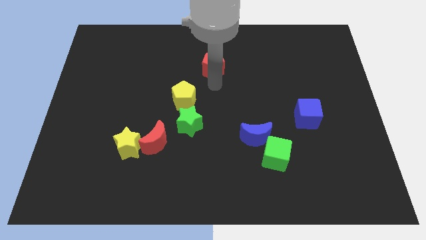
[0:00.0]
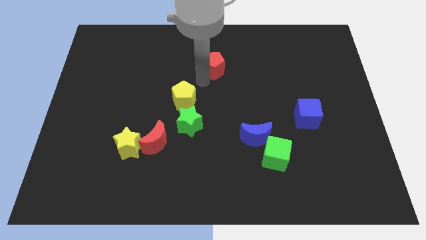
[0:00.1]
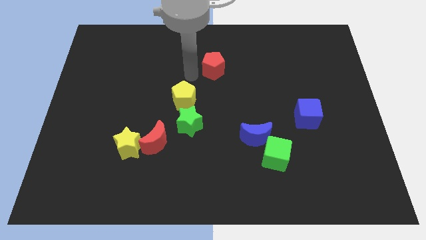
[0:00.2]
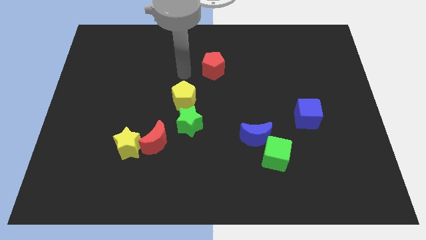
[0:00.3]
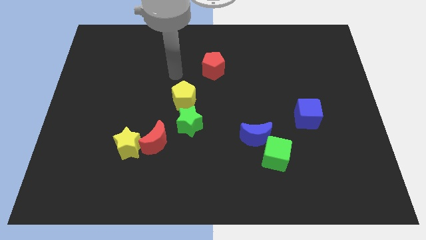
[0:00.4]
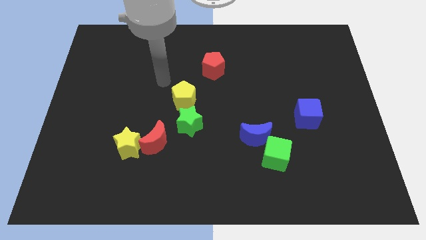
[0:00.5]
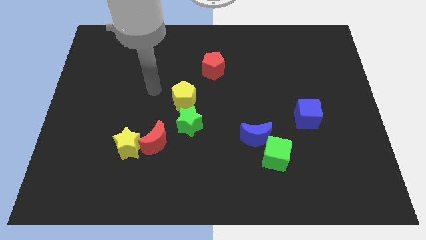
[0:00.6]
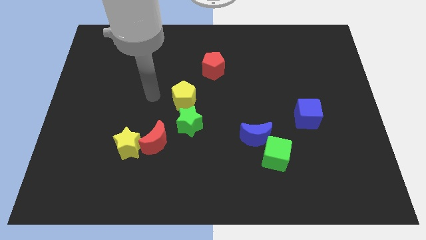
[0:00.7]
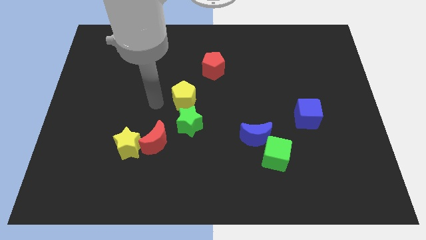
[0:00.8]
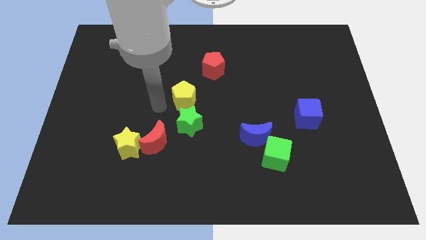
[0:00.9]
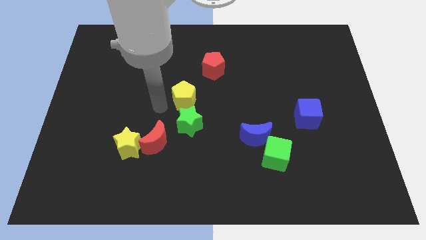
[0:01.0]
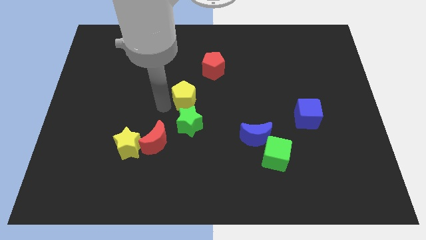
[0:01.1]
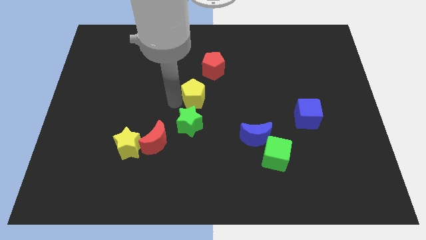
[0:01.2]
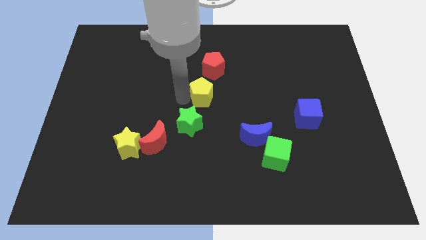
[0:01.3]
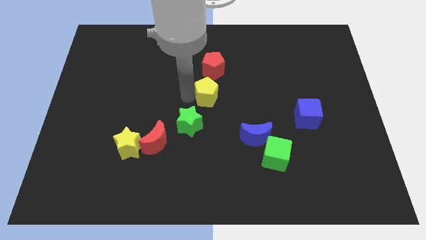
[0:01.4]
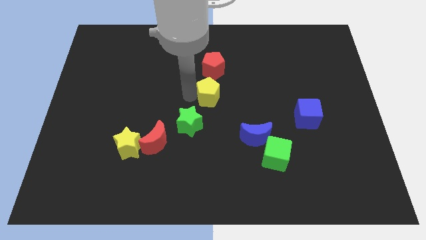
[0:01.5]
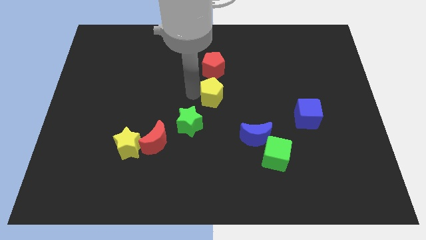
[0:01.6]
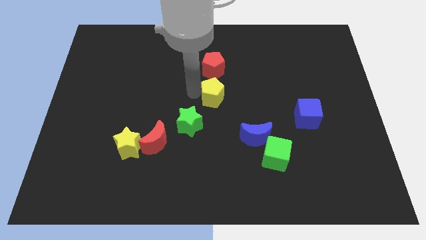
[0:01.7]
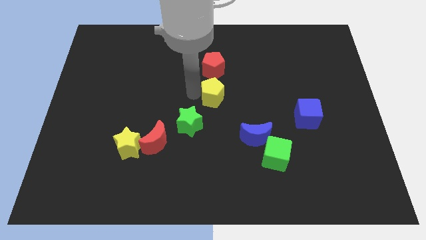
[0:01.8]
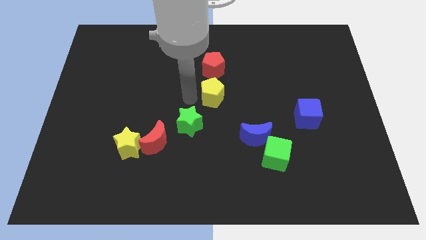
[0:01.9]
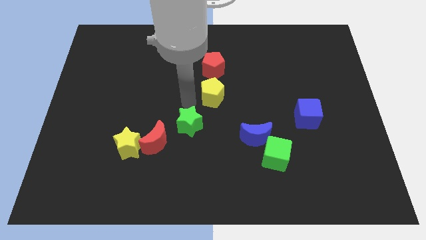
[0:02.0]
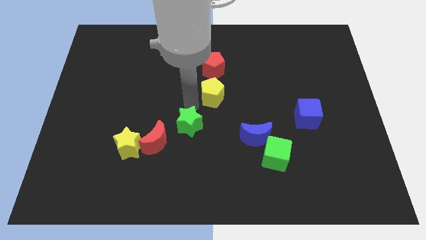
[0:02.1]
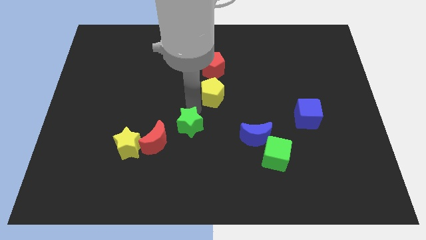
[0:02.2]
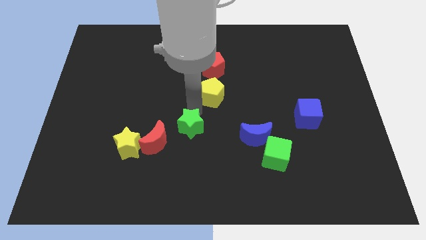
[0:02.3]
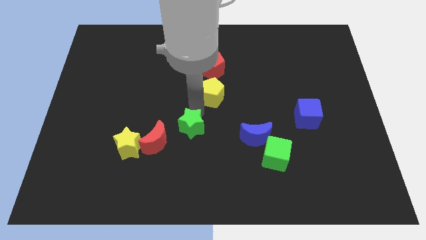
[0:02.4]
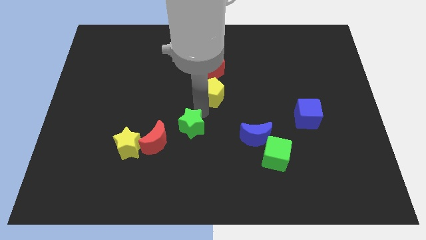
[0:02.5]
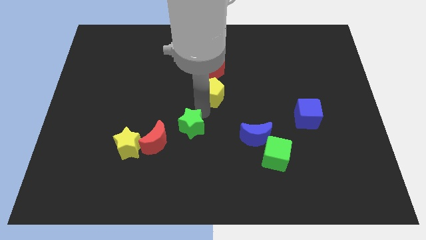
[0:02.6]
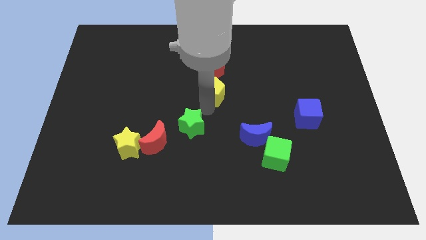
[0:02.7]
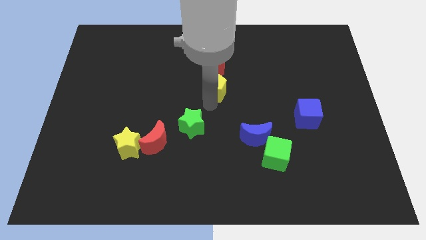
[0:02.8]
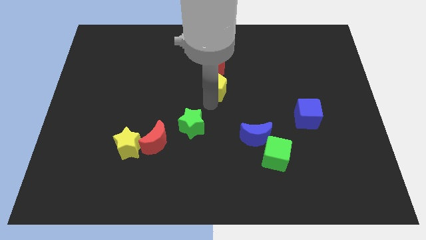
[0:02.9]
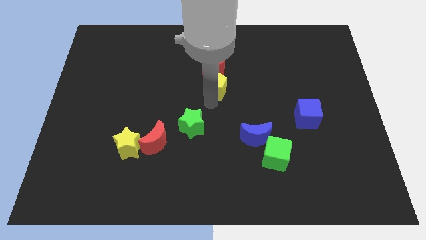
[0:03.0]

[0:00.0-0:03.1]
push the yellow pentagon to the bottom of red pentagon

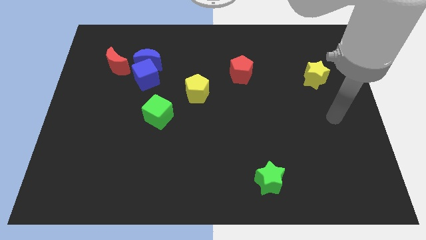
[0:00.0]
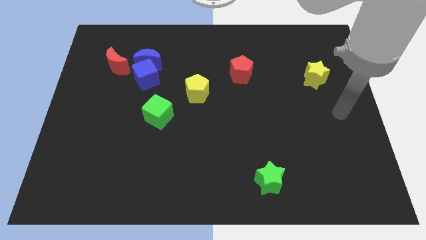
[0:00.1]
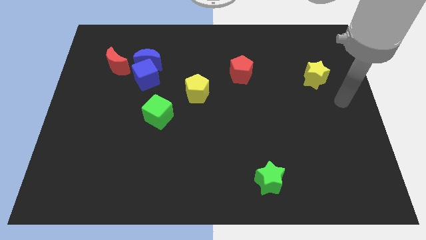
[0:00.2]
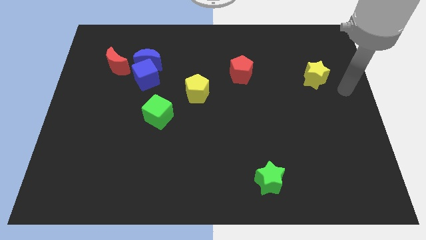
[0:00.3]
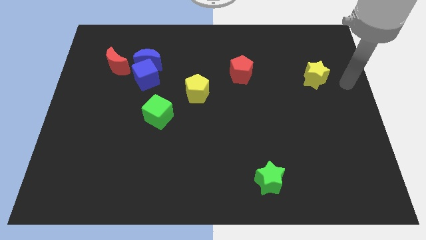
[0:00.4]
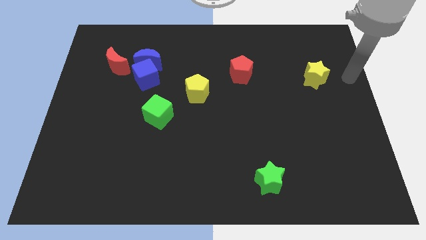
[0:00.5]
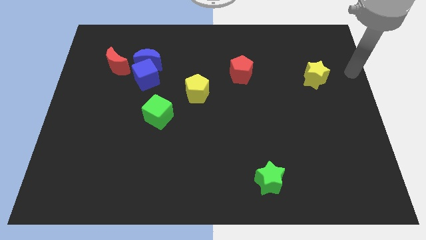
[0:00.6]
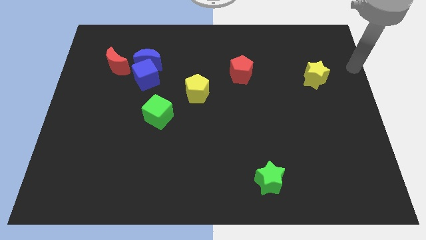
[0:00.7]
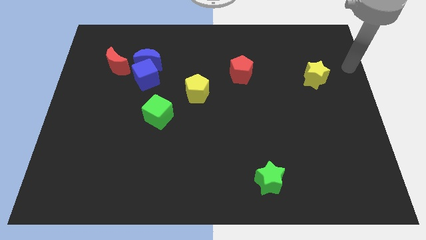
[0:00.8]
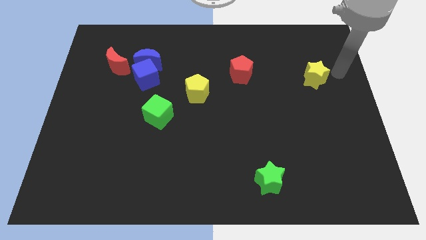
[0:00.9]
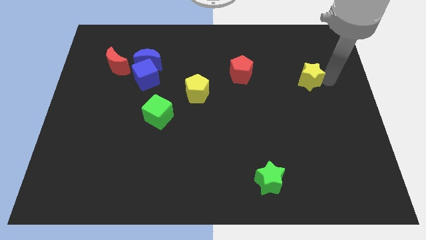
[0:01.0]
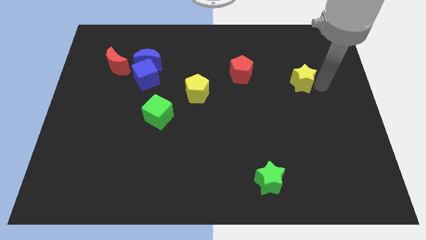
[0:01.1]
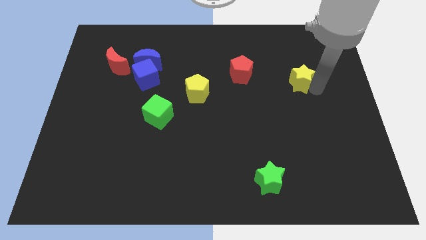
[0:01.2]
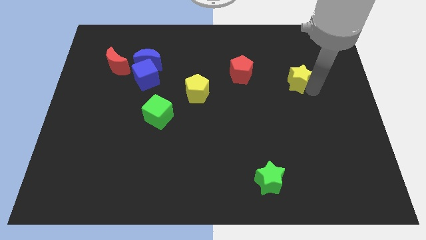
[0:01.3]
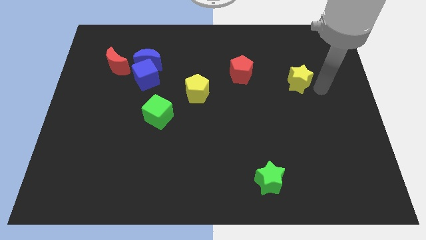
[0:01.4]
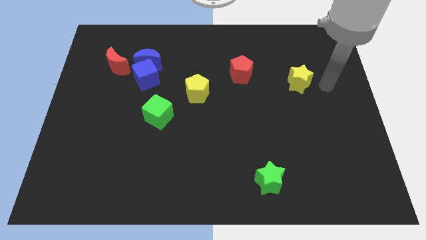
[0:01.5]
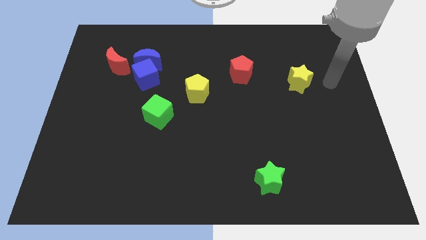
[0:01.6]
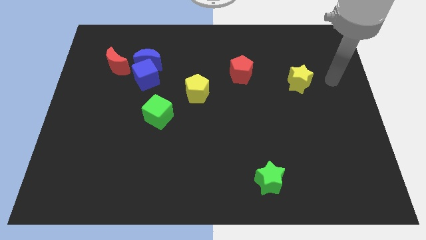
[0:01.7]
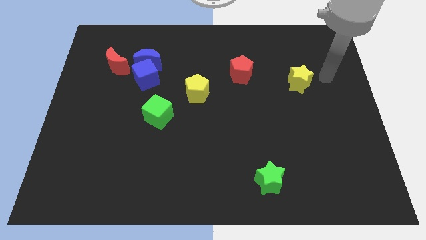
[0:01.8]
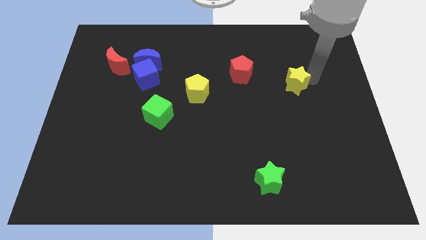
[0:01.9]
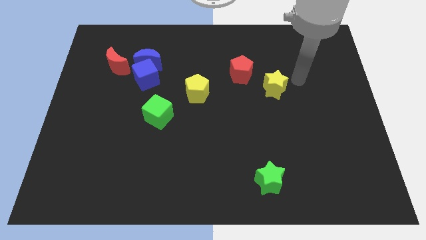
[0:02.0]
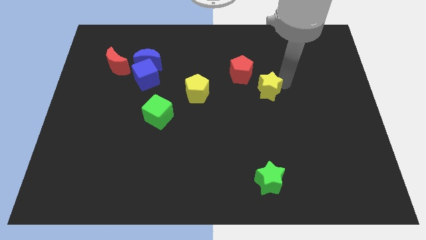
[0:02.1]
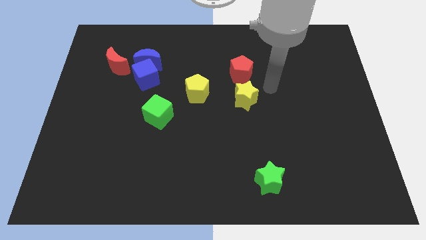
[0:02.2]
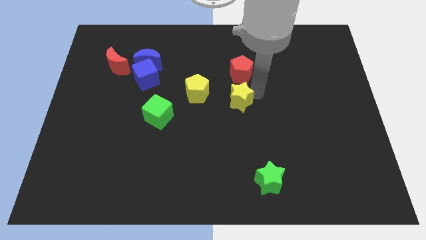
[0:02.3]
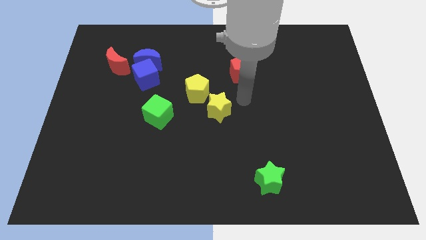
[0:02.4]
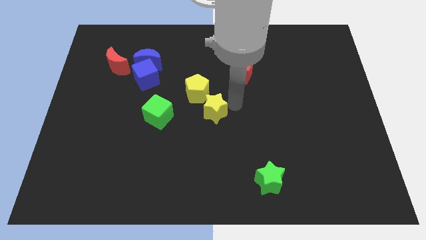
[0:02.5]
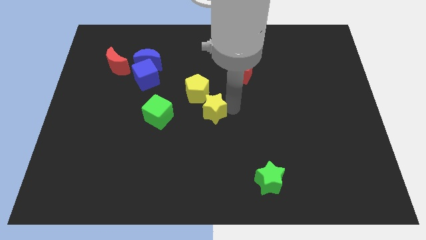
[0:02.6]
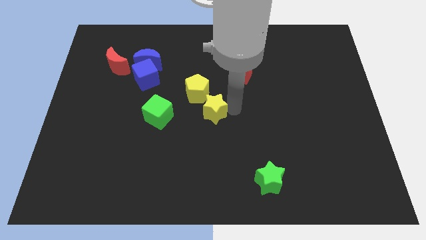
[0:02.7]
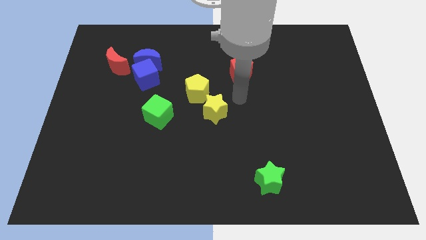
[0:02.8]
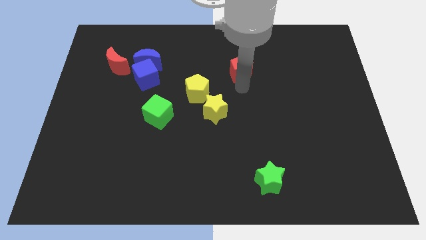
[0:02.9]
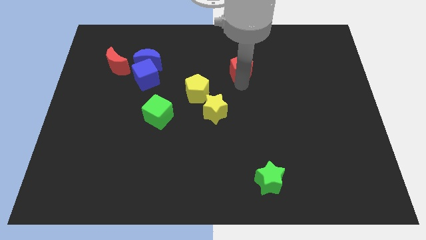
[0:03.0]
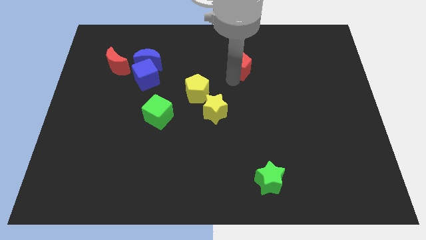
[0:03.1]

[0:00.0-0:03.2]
place the yellow star at the center

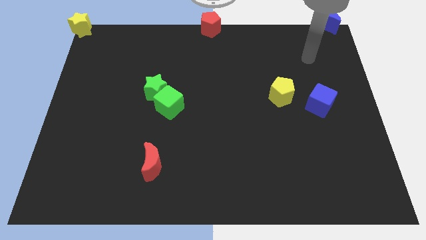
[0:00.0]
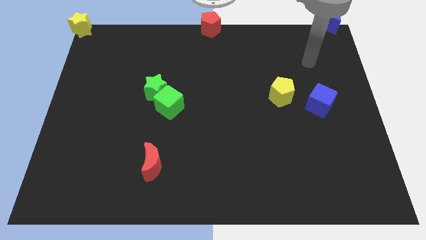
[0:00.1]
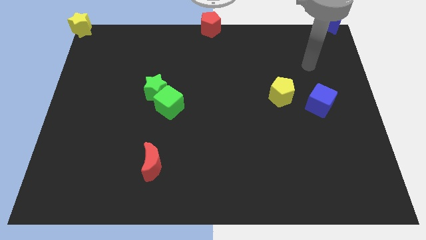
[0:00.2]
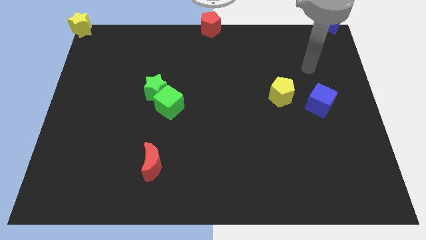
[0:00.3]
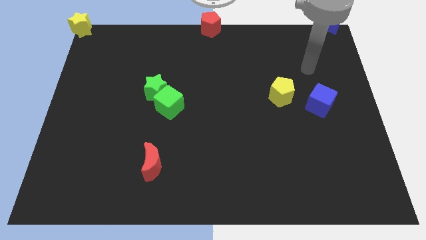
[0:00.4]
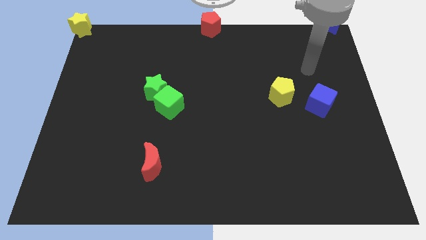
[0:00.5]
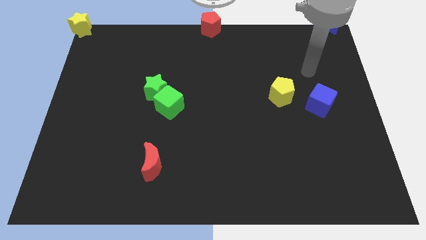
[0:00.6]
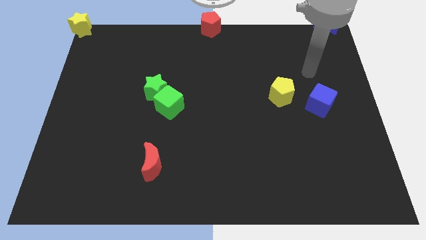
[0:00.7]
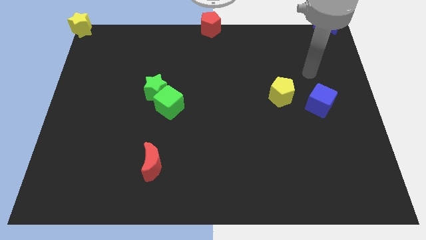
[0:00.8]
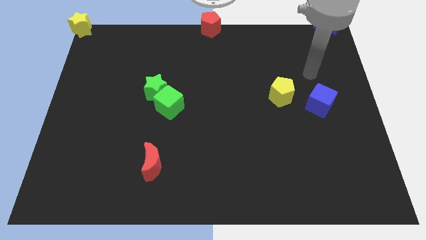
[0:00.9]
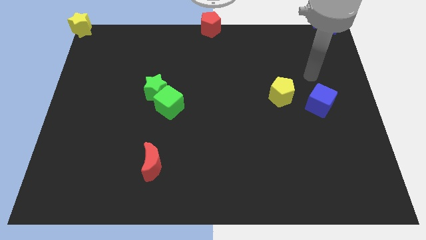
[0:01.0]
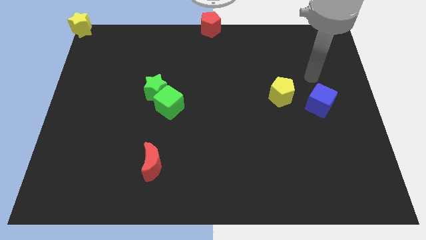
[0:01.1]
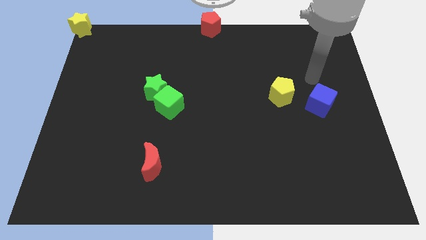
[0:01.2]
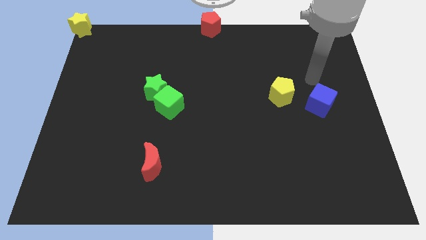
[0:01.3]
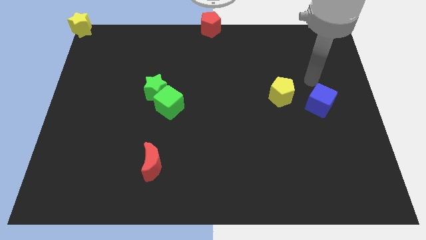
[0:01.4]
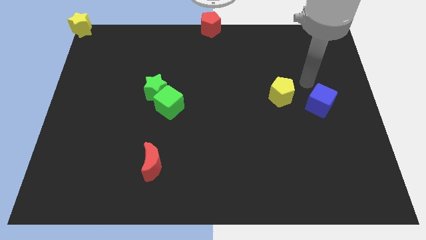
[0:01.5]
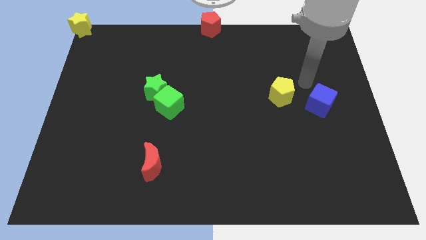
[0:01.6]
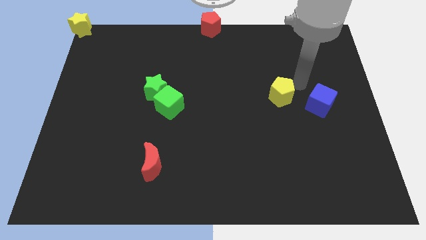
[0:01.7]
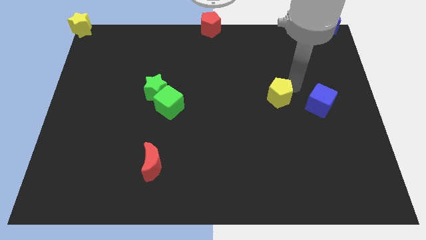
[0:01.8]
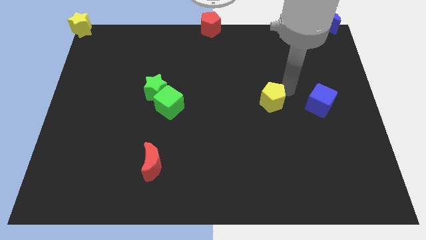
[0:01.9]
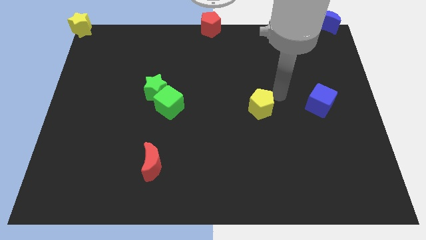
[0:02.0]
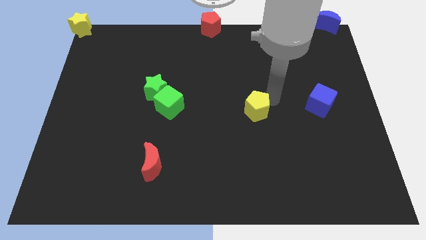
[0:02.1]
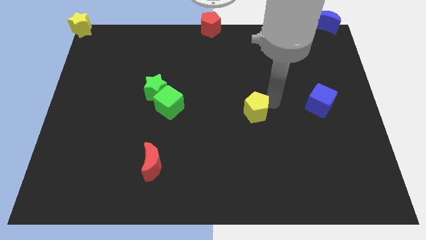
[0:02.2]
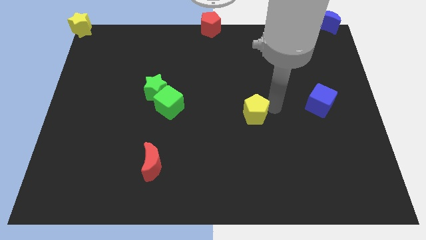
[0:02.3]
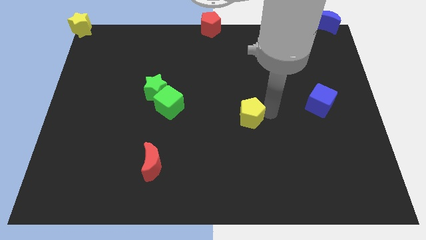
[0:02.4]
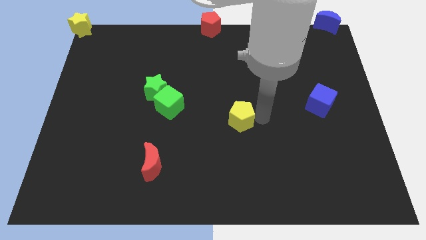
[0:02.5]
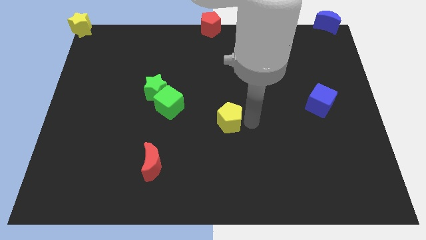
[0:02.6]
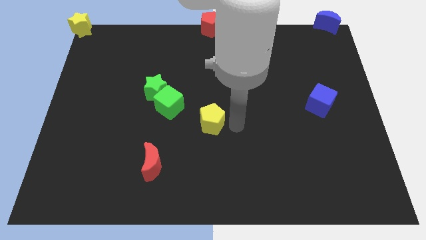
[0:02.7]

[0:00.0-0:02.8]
move the yellow pentagon to the vertical bottom side of the red pentagon
